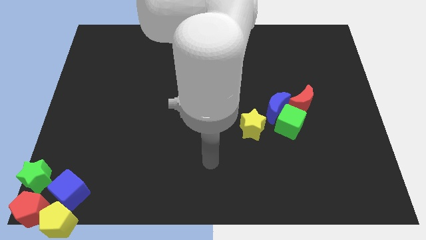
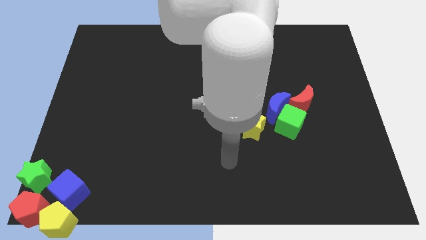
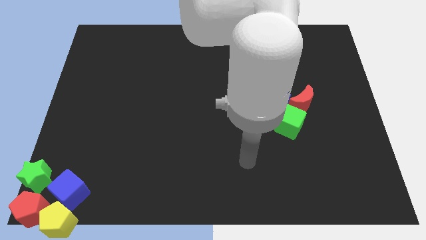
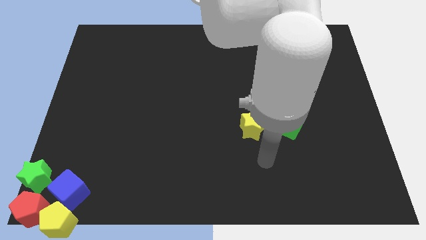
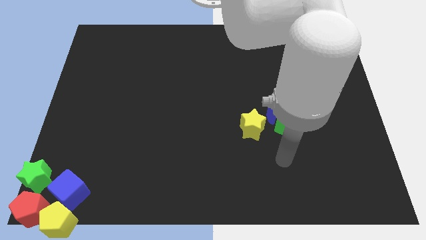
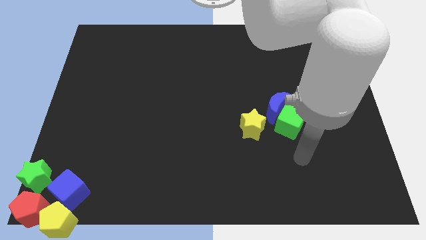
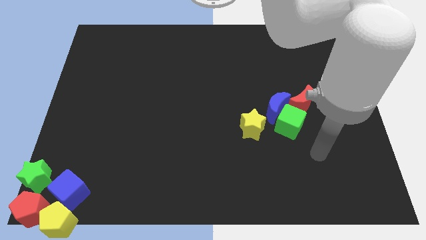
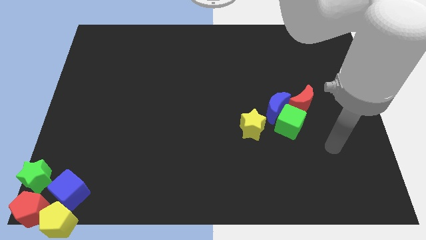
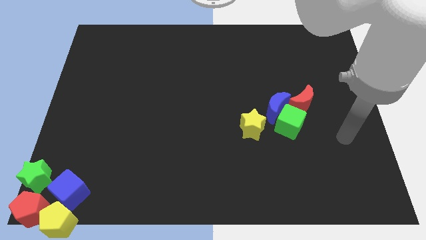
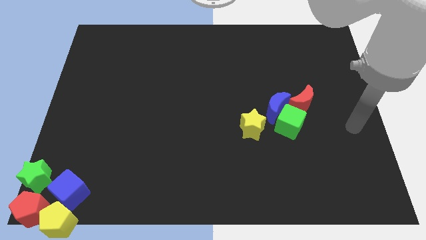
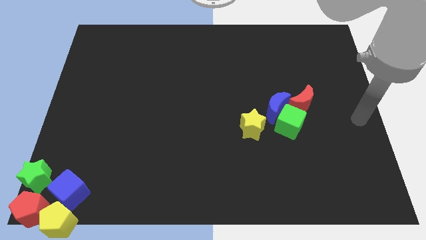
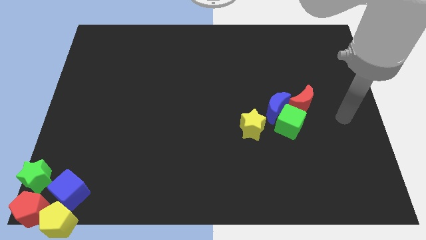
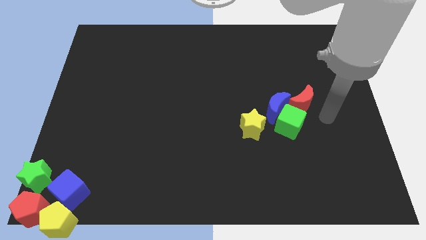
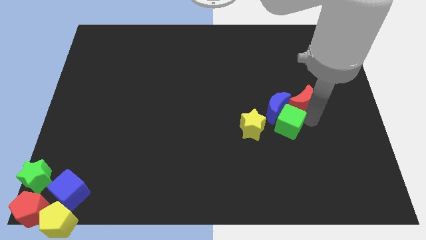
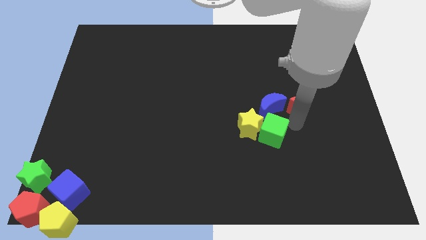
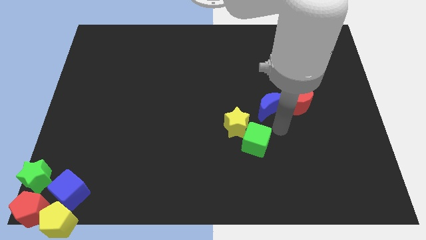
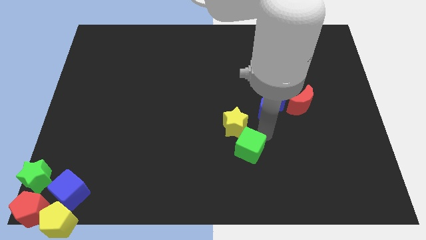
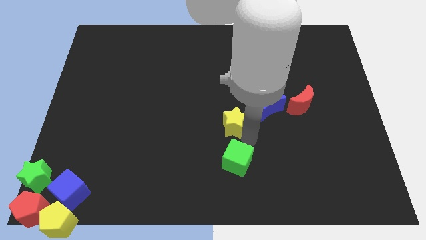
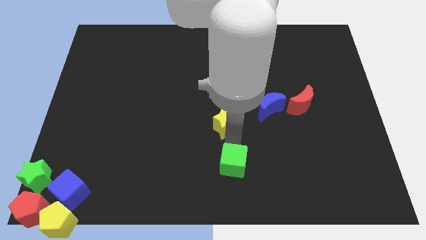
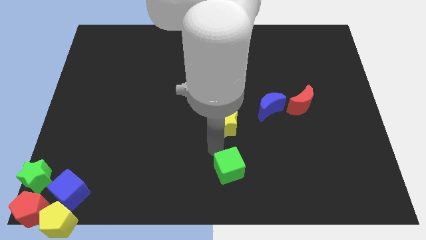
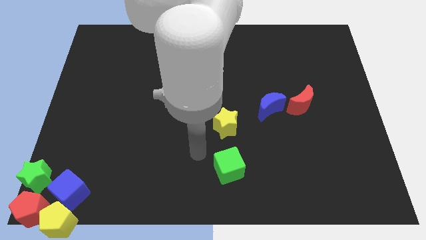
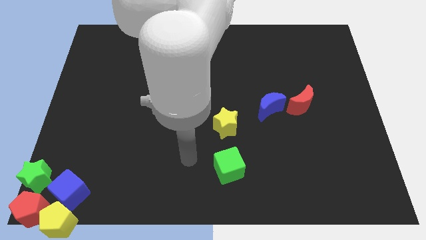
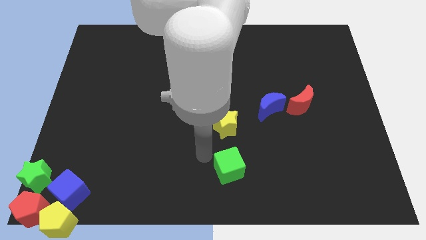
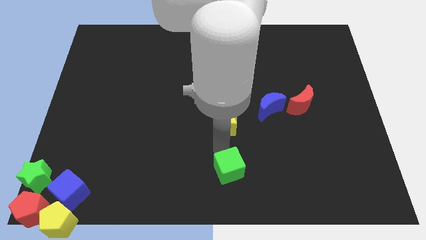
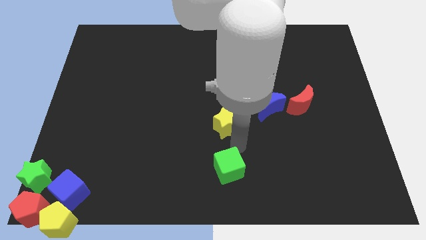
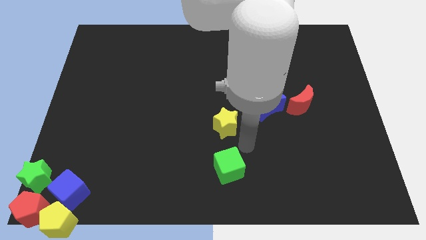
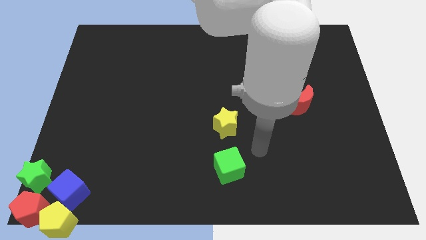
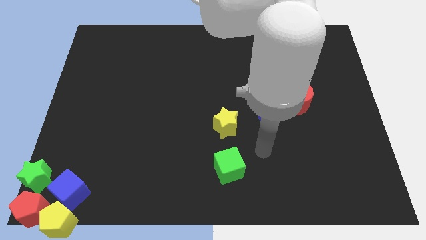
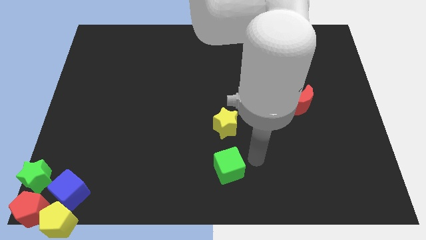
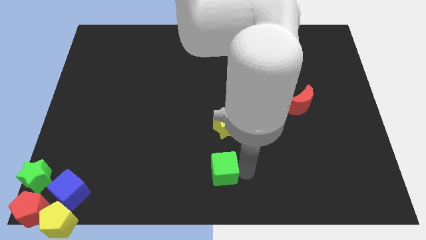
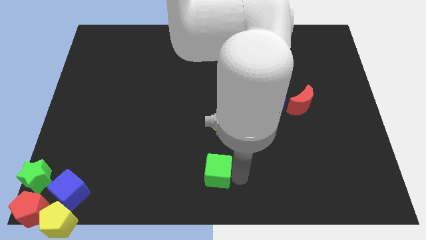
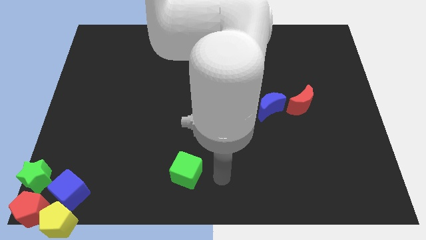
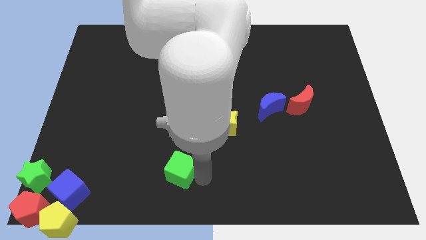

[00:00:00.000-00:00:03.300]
move the green cube towards left

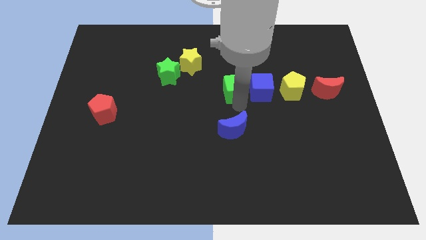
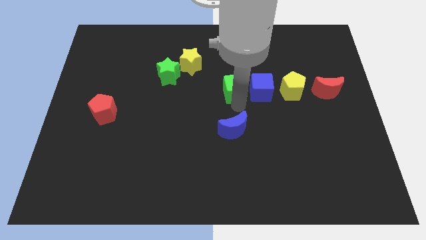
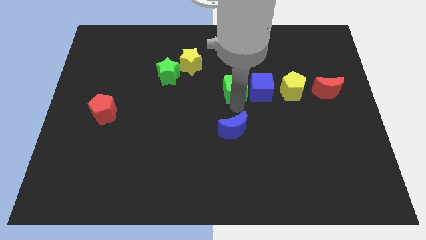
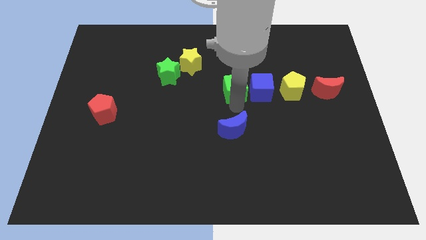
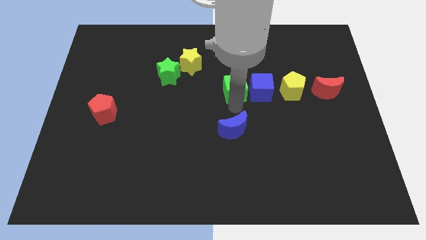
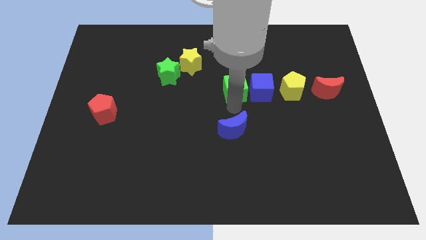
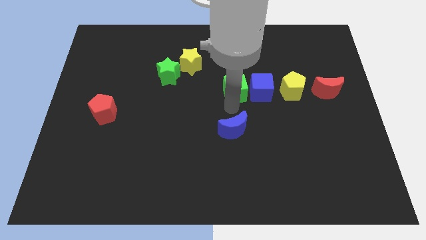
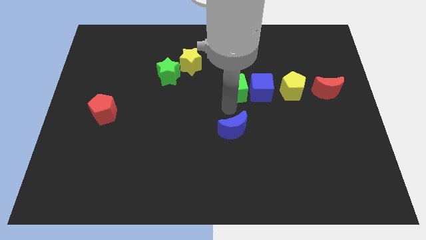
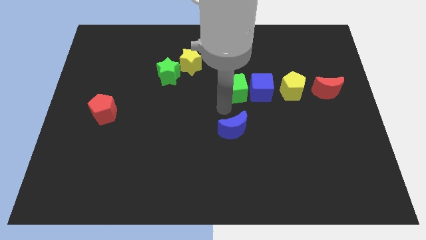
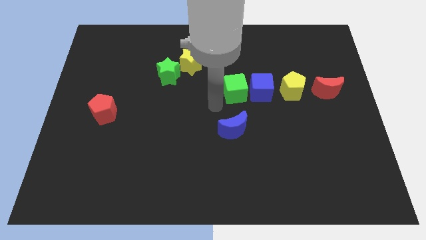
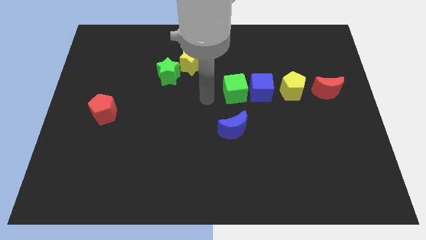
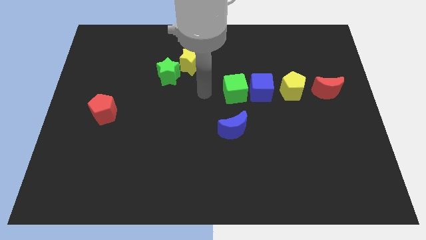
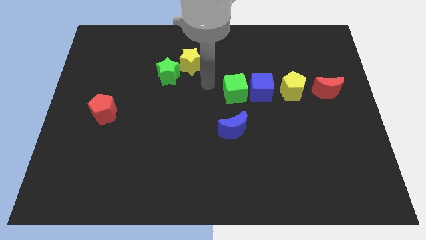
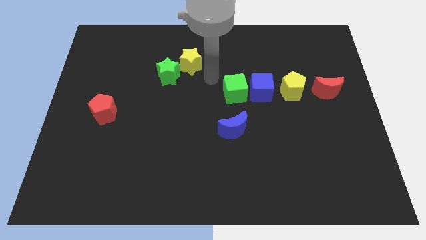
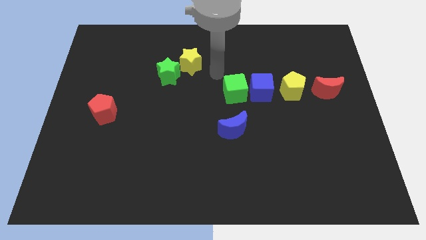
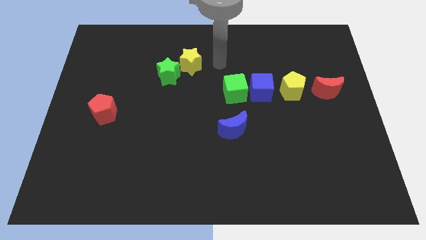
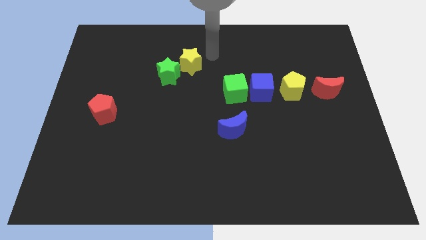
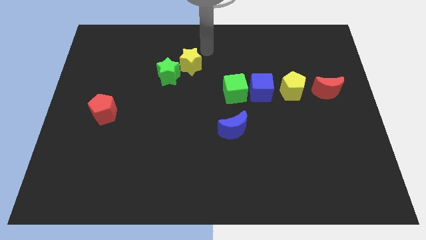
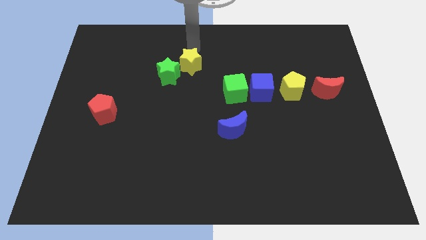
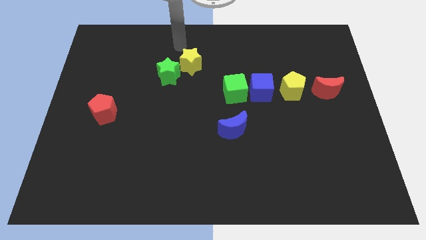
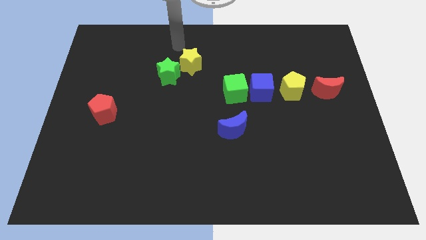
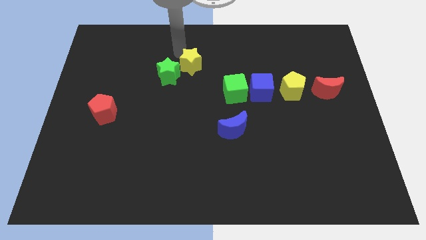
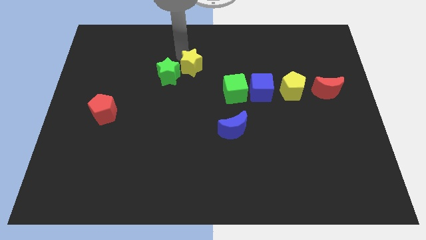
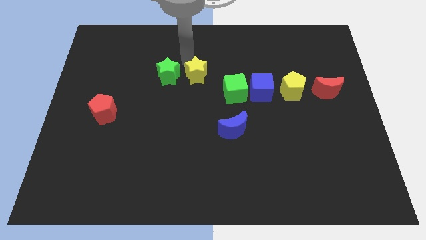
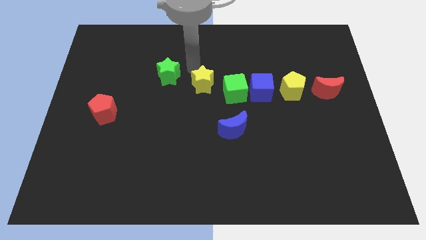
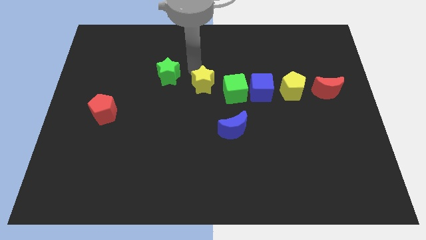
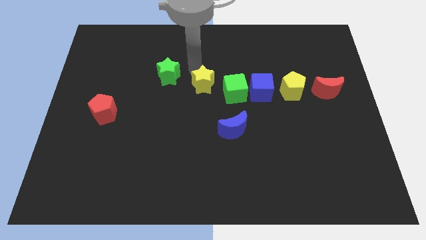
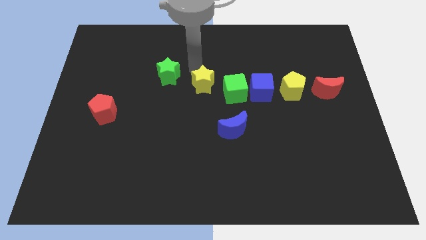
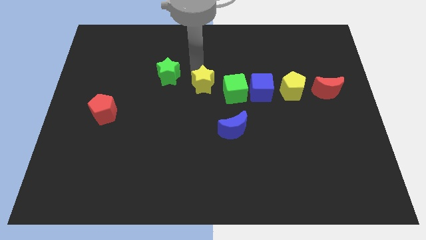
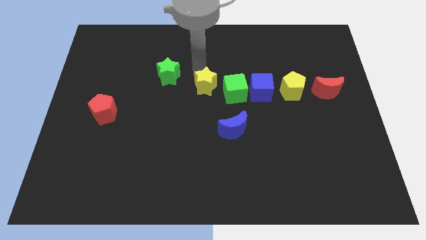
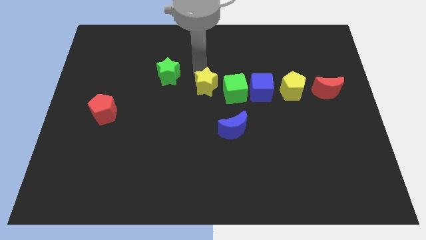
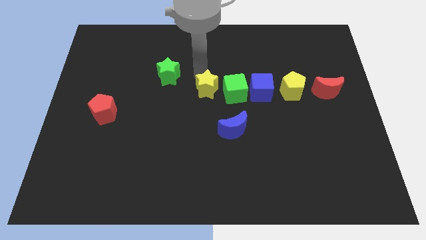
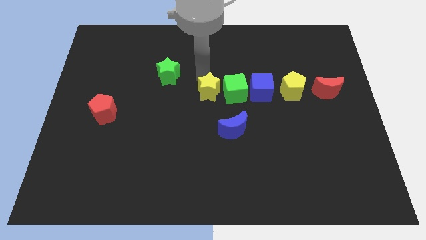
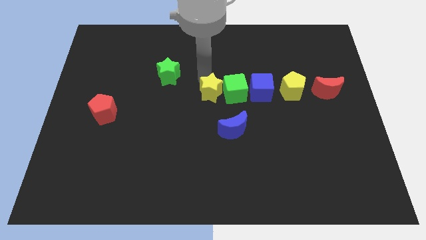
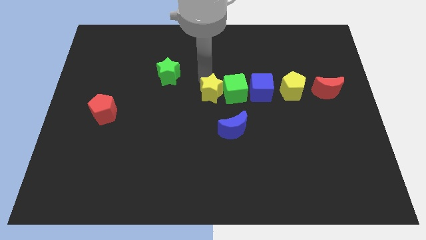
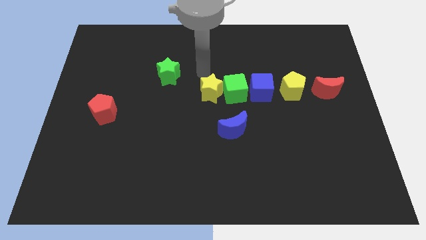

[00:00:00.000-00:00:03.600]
move the yellow star into the left of the green cube

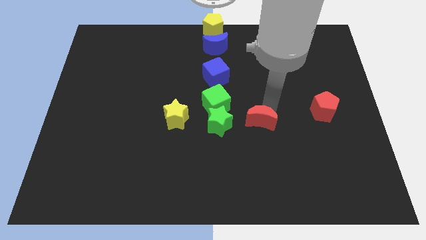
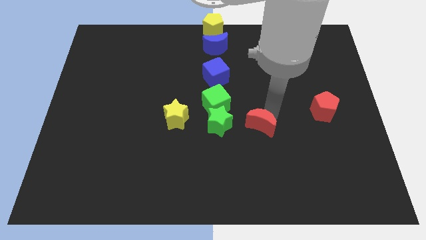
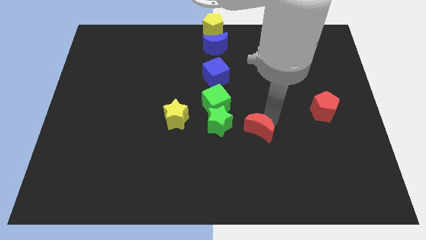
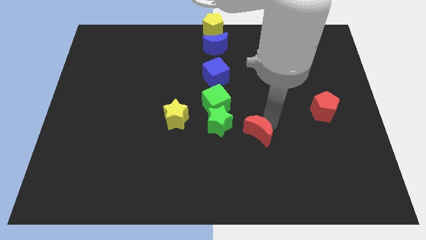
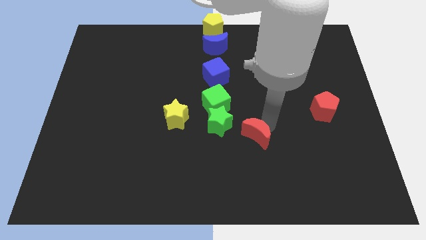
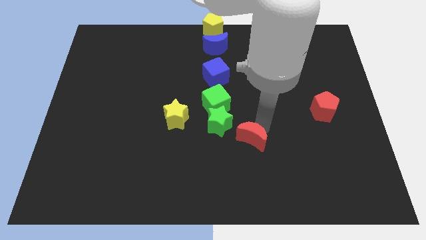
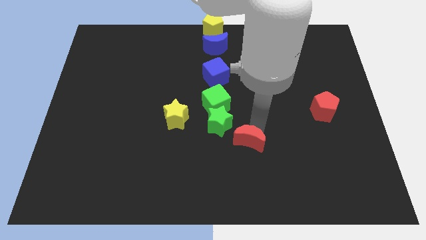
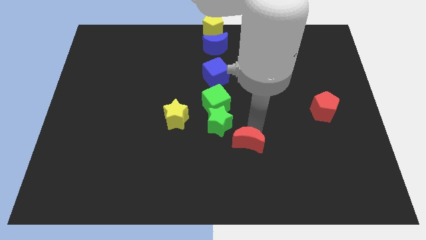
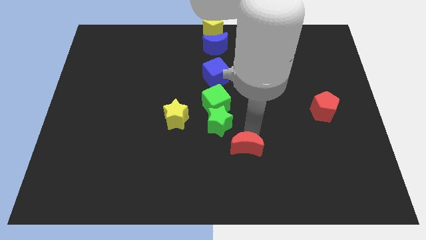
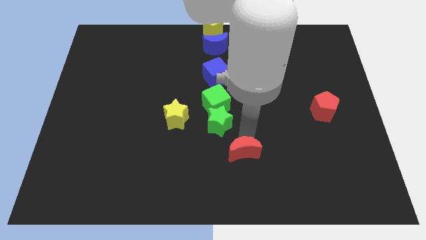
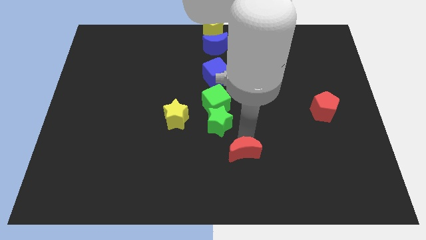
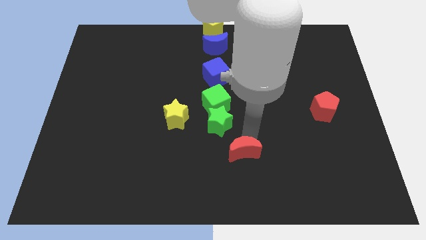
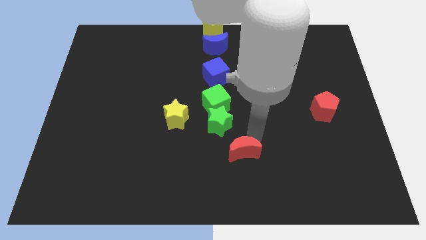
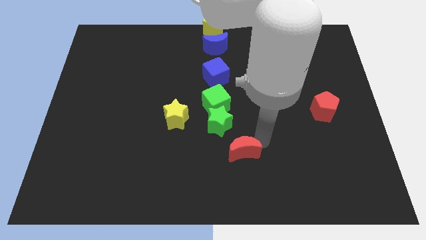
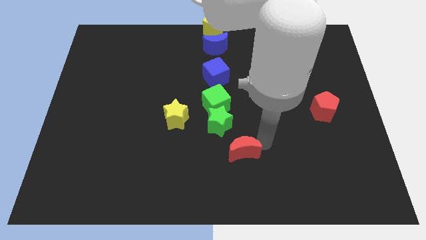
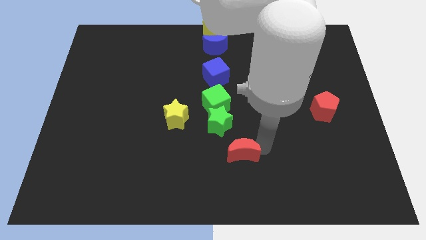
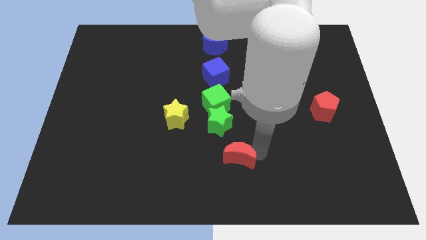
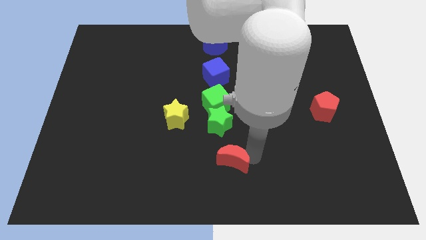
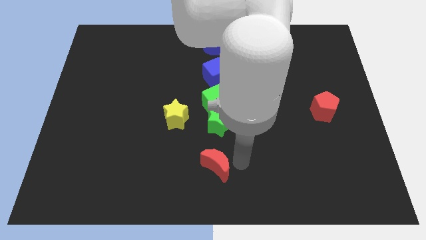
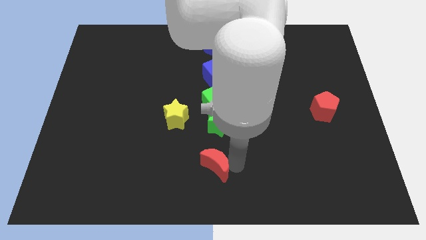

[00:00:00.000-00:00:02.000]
move the red crescent to the bottom of the green star
